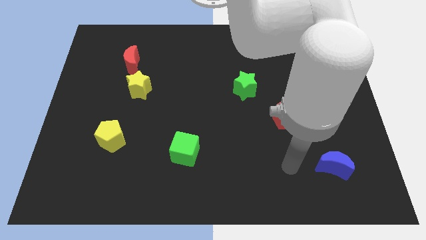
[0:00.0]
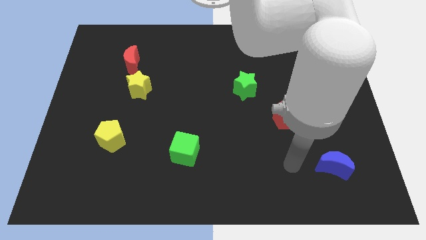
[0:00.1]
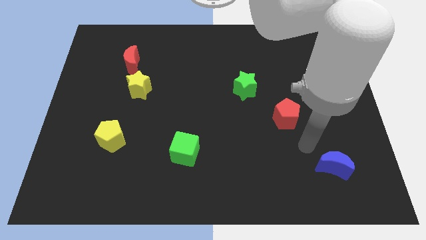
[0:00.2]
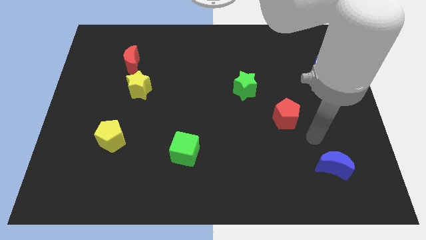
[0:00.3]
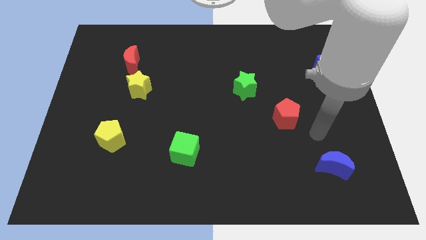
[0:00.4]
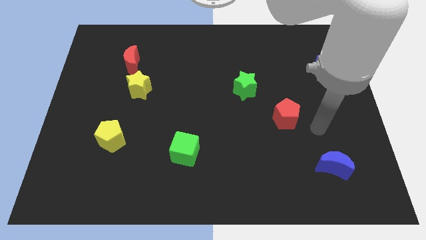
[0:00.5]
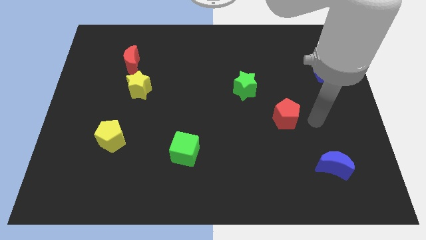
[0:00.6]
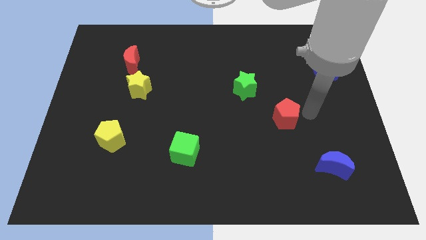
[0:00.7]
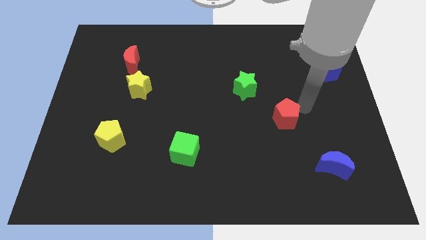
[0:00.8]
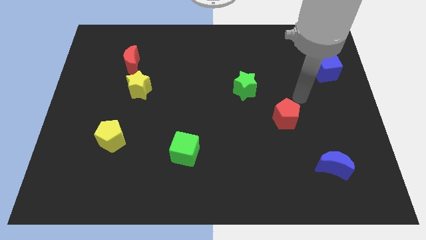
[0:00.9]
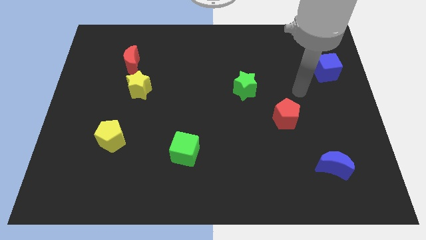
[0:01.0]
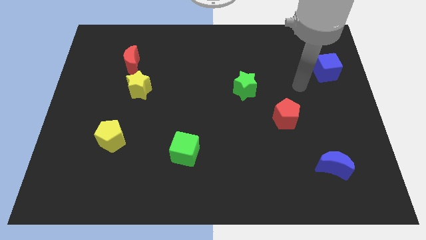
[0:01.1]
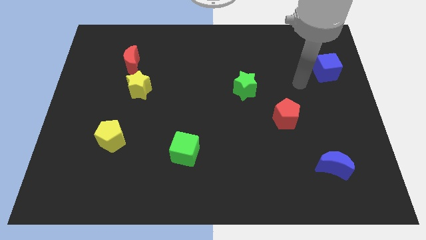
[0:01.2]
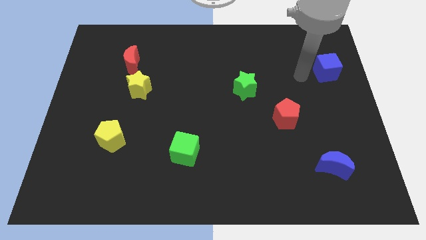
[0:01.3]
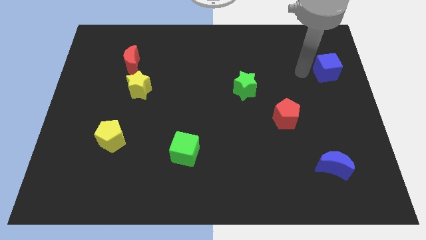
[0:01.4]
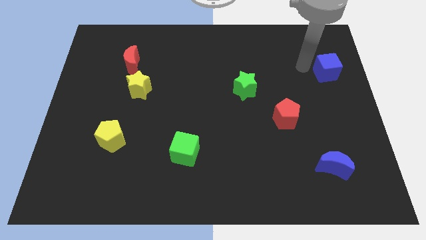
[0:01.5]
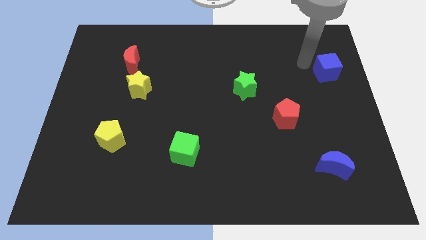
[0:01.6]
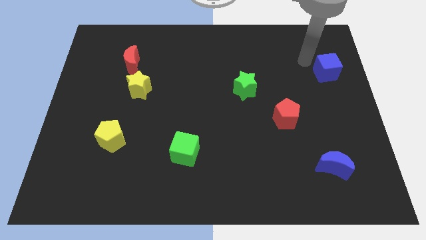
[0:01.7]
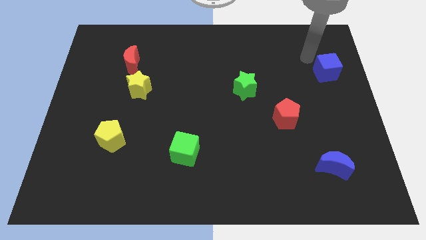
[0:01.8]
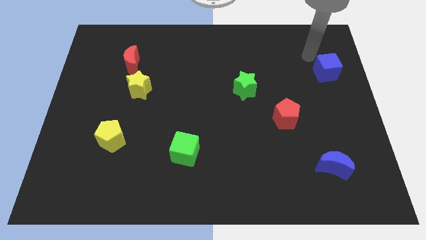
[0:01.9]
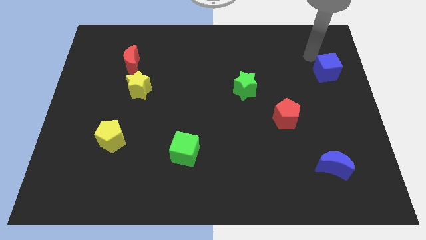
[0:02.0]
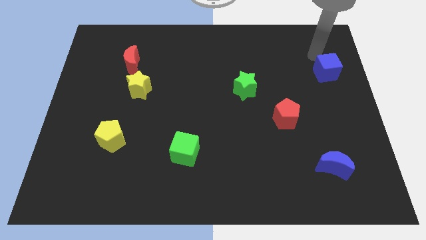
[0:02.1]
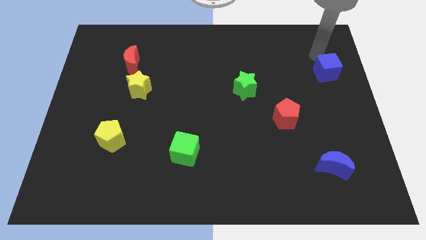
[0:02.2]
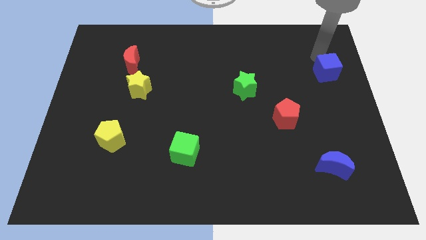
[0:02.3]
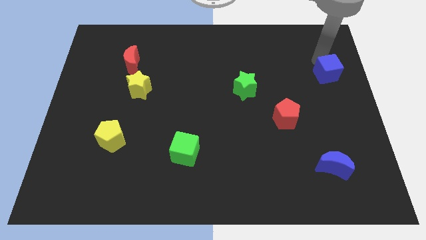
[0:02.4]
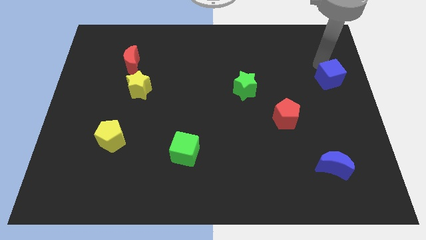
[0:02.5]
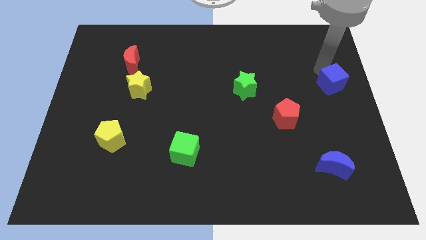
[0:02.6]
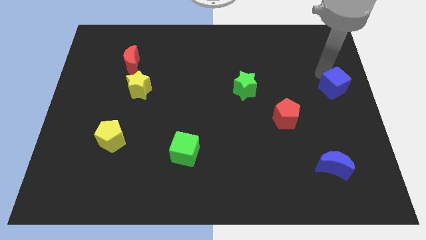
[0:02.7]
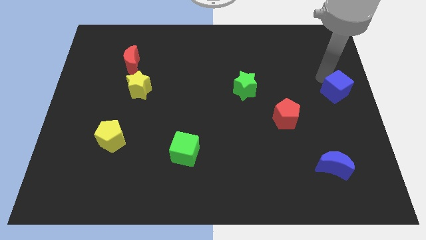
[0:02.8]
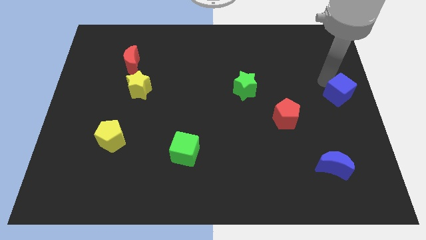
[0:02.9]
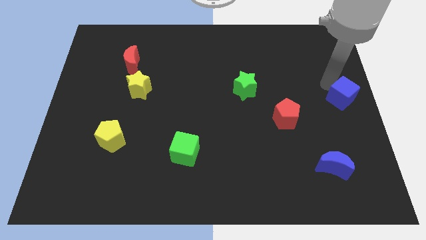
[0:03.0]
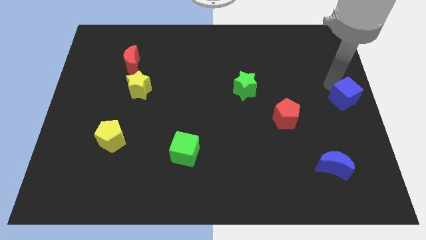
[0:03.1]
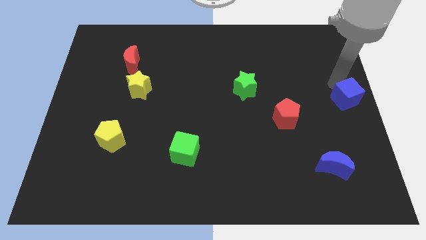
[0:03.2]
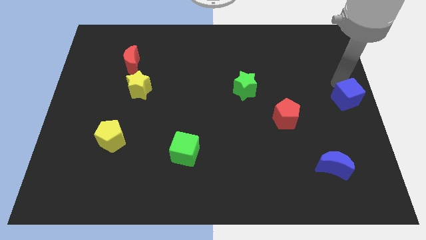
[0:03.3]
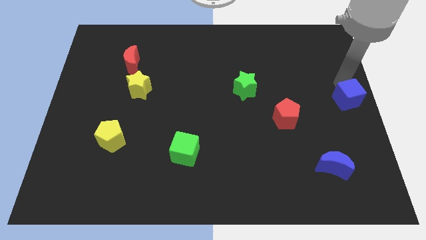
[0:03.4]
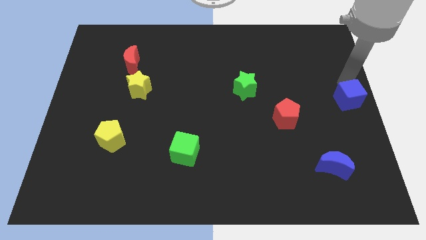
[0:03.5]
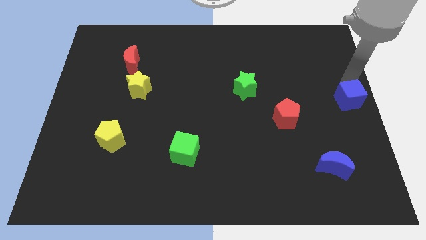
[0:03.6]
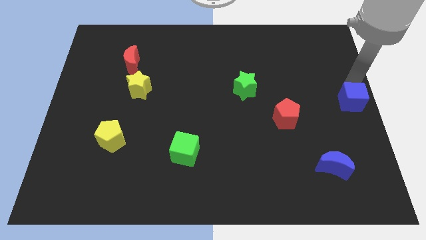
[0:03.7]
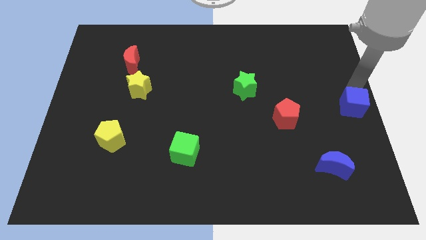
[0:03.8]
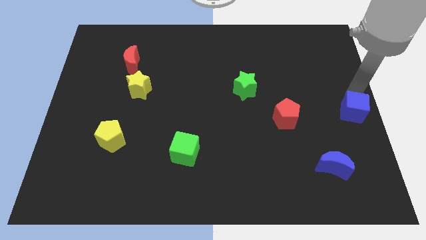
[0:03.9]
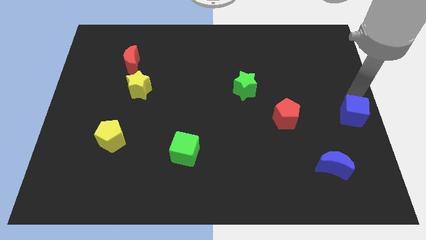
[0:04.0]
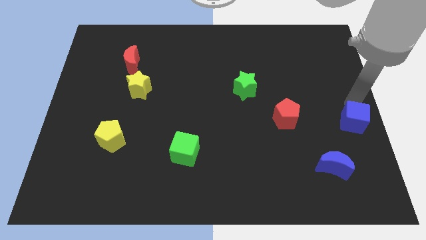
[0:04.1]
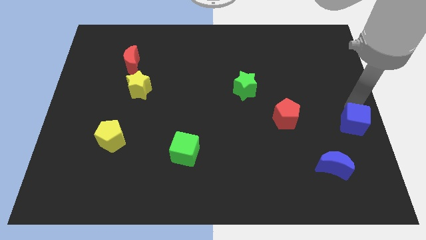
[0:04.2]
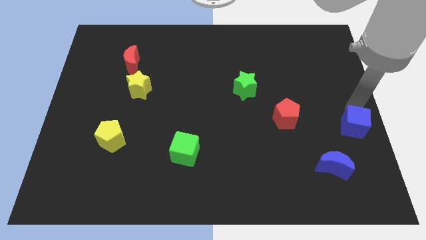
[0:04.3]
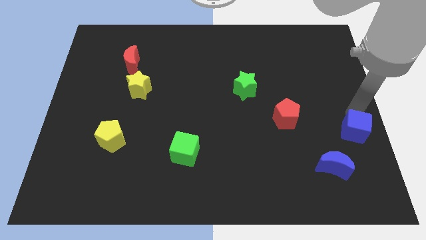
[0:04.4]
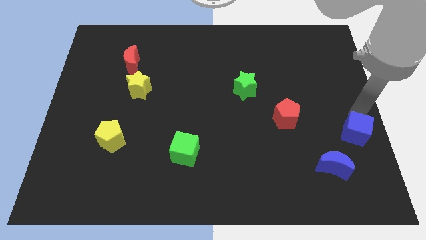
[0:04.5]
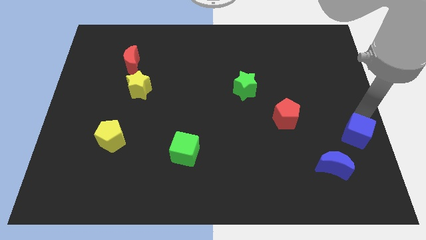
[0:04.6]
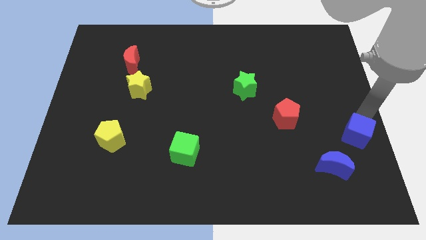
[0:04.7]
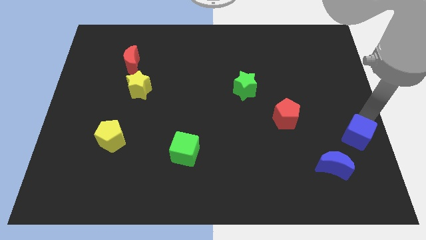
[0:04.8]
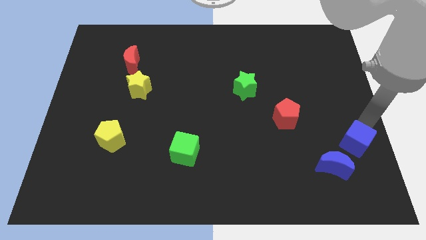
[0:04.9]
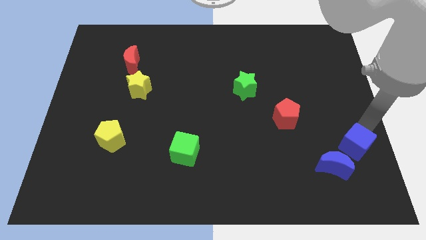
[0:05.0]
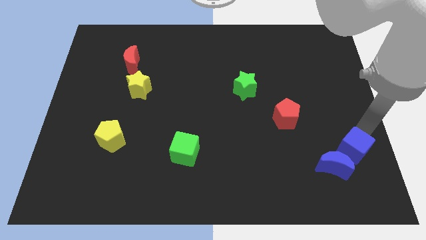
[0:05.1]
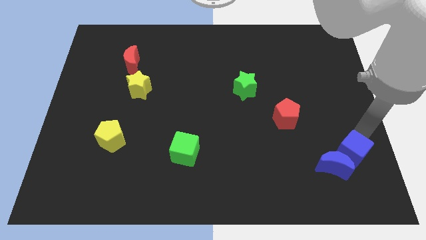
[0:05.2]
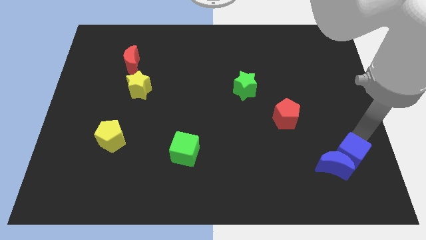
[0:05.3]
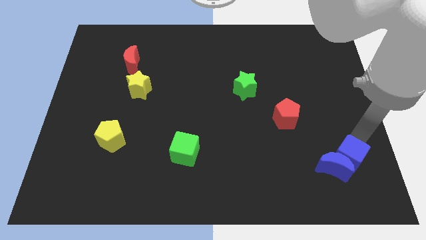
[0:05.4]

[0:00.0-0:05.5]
slide the blue cube next to the blue moon

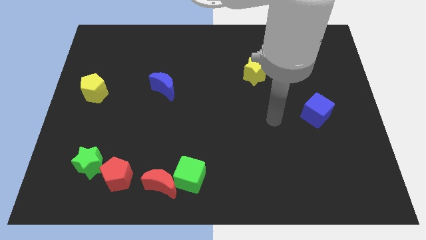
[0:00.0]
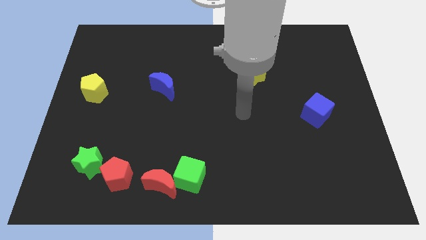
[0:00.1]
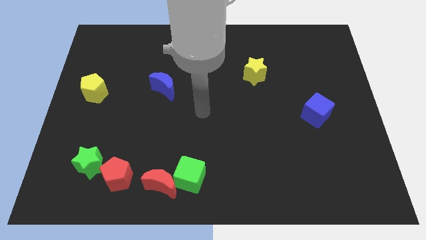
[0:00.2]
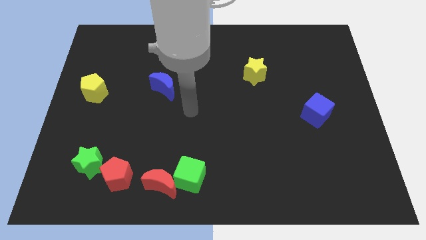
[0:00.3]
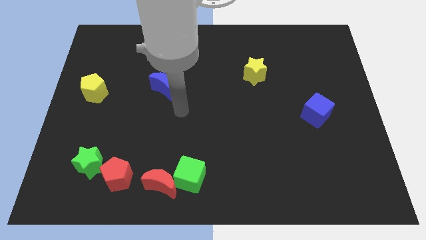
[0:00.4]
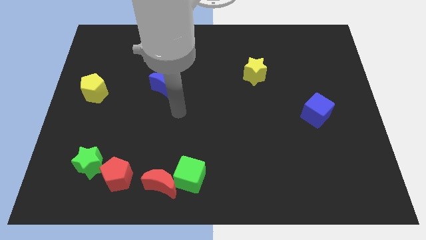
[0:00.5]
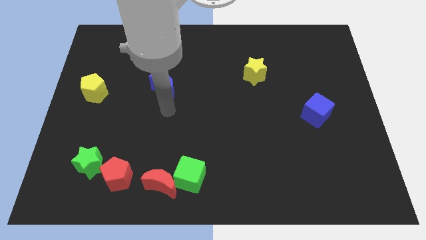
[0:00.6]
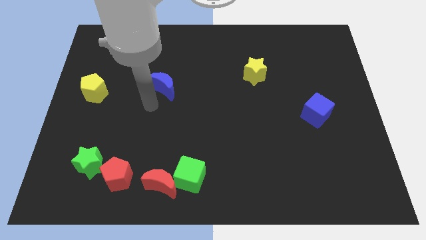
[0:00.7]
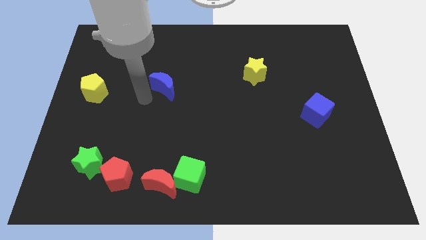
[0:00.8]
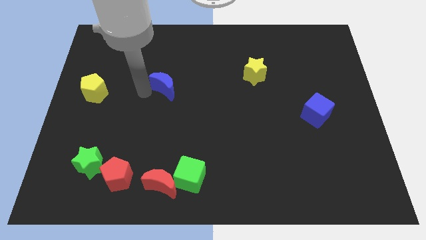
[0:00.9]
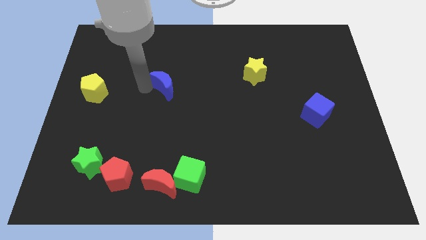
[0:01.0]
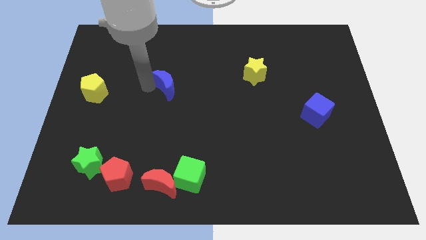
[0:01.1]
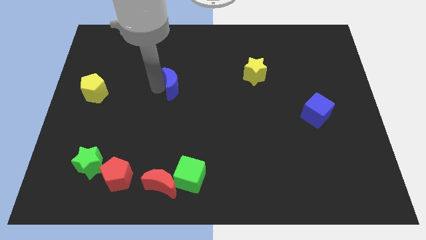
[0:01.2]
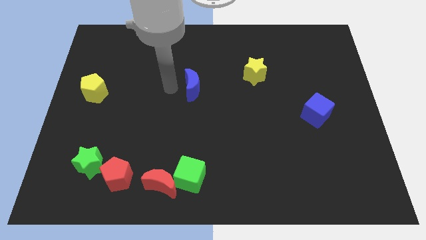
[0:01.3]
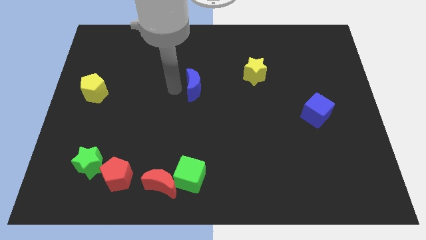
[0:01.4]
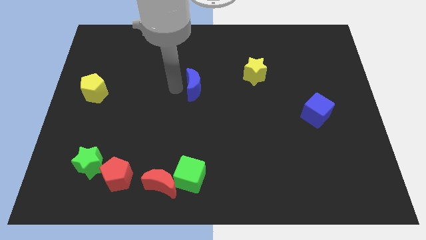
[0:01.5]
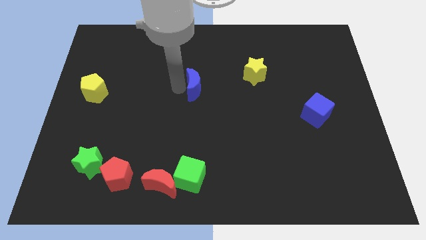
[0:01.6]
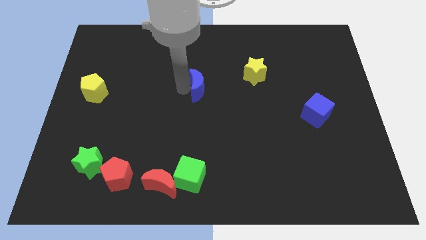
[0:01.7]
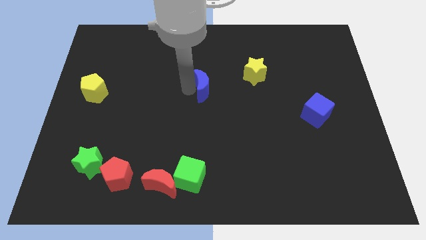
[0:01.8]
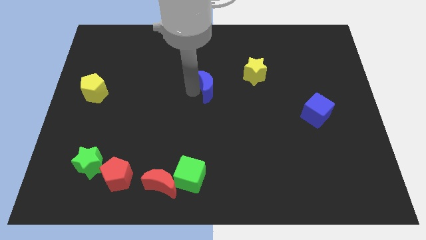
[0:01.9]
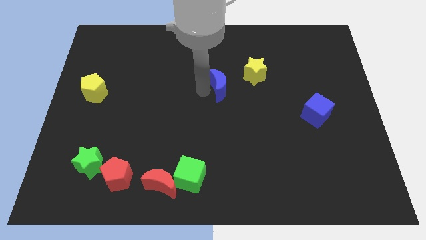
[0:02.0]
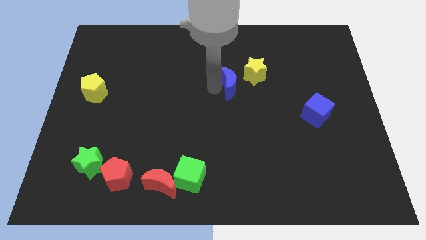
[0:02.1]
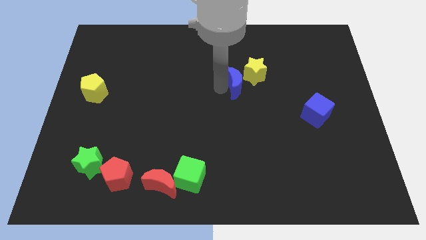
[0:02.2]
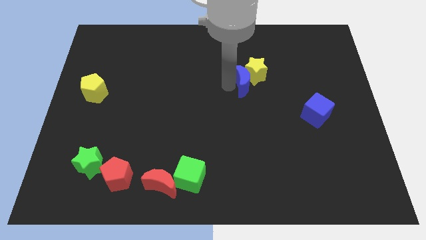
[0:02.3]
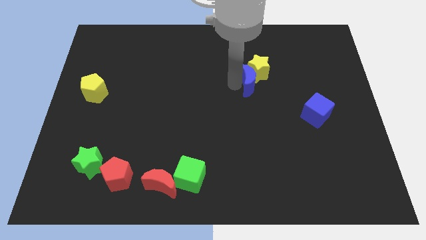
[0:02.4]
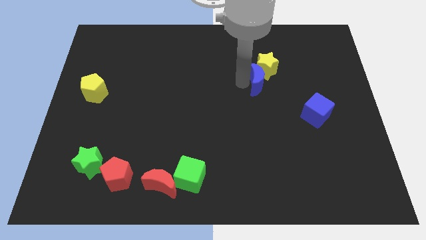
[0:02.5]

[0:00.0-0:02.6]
push the blue moon to the yellow star

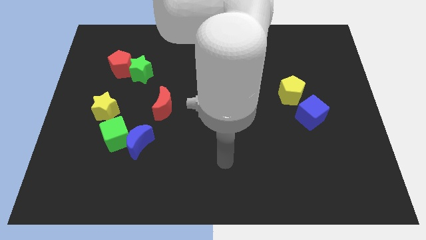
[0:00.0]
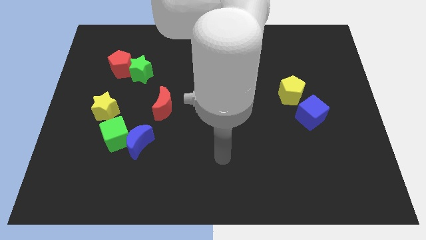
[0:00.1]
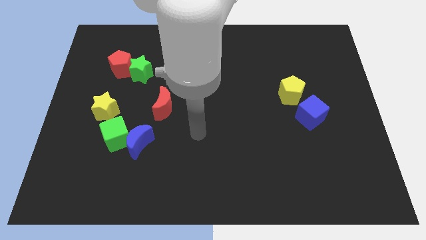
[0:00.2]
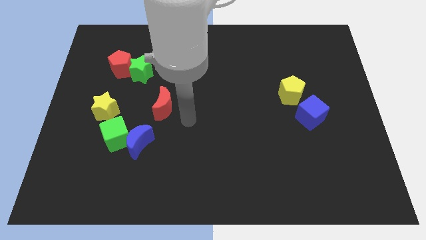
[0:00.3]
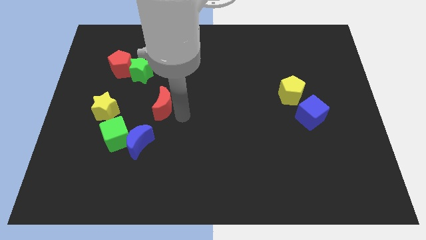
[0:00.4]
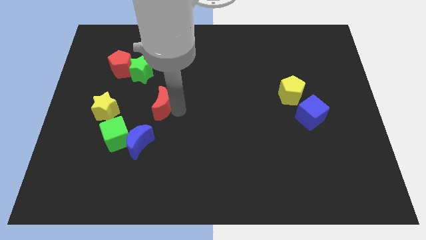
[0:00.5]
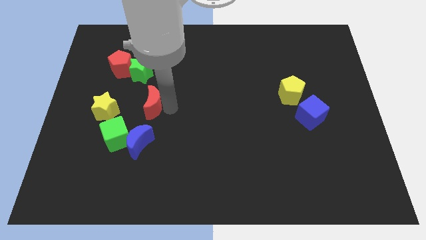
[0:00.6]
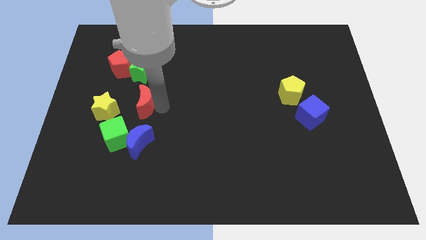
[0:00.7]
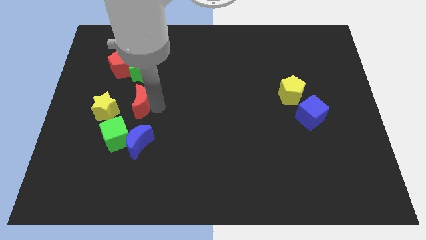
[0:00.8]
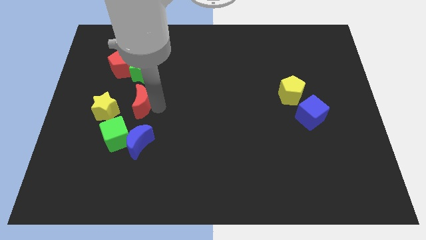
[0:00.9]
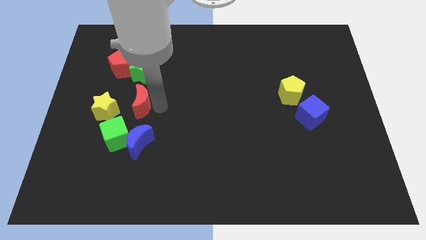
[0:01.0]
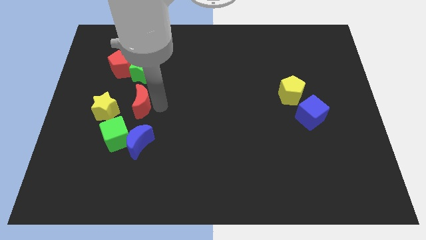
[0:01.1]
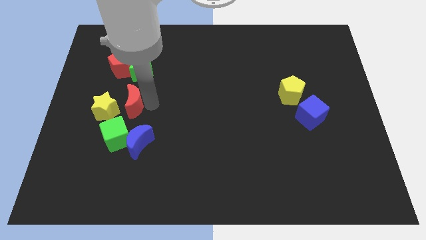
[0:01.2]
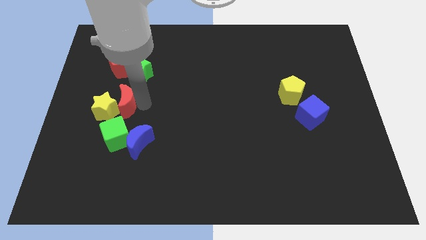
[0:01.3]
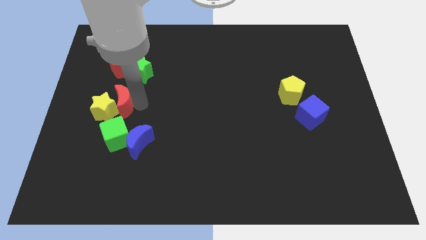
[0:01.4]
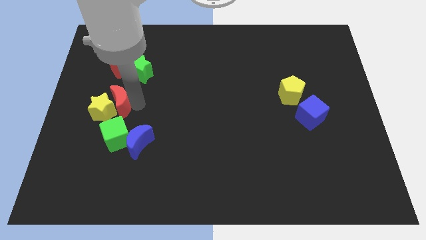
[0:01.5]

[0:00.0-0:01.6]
slide the red moon towards the yellow star
